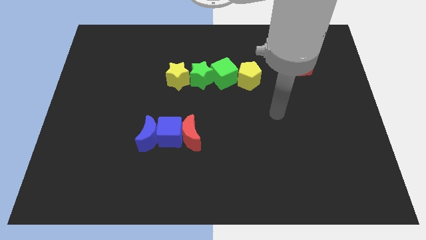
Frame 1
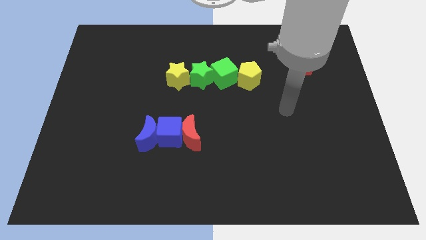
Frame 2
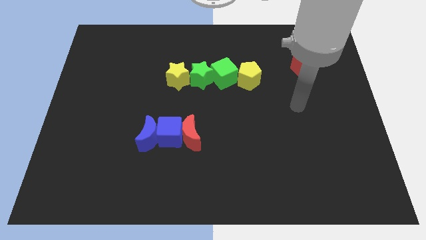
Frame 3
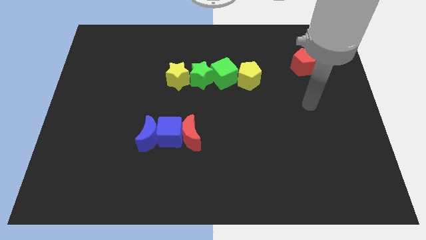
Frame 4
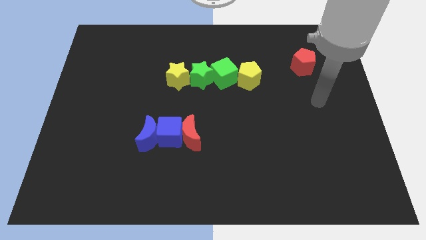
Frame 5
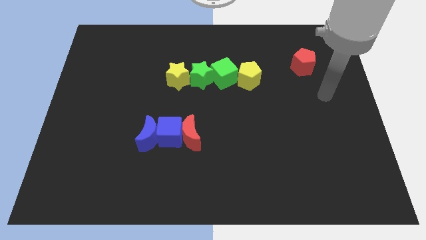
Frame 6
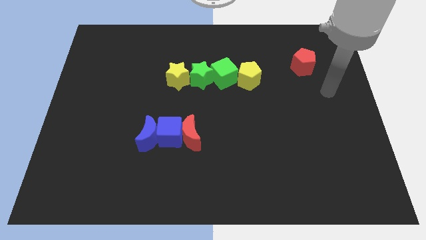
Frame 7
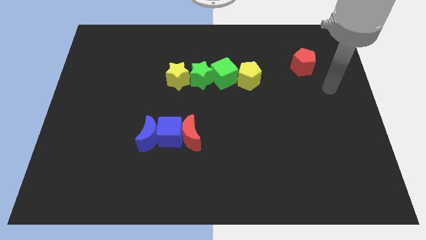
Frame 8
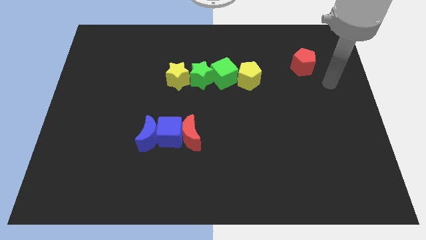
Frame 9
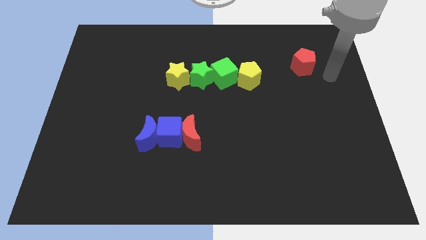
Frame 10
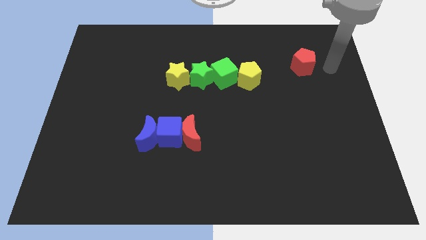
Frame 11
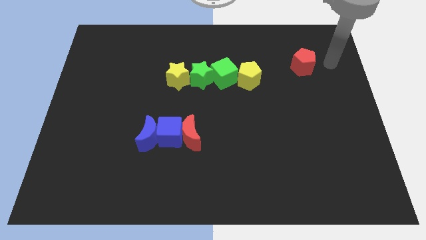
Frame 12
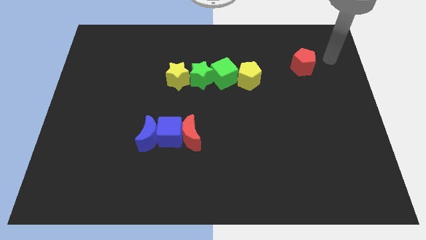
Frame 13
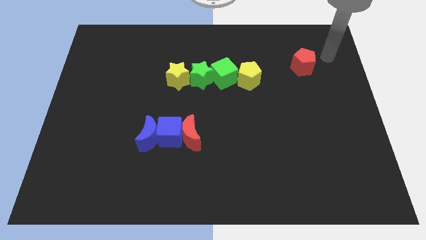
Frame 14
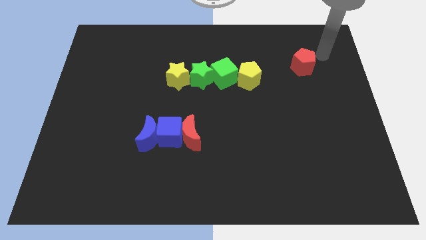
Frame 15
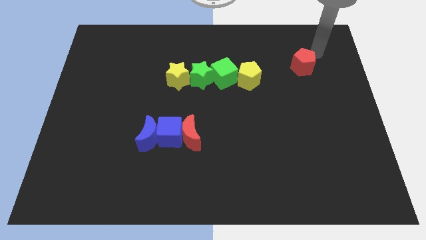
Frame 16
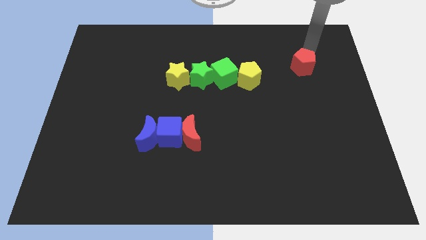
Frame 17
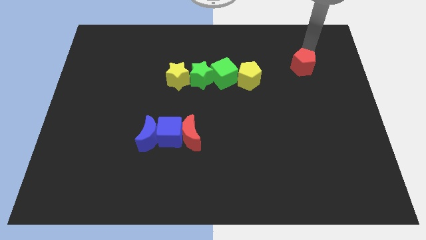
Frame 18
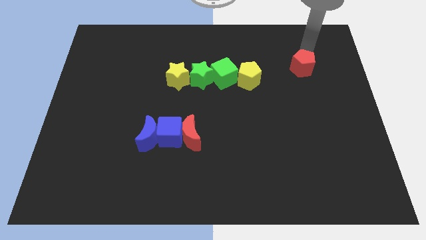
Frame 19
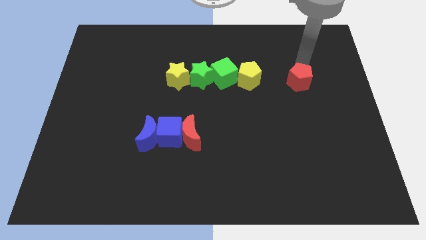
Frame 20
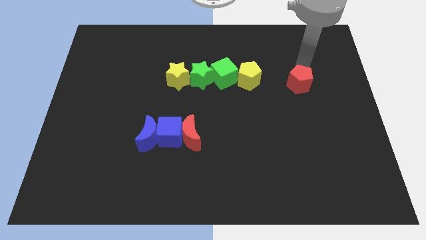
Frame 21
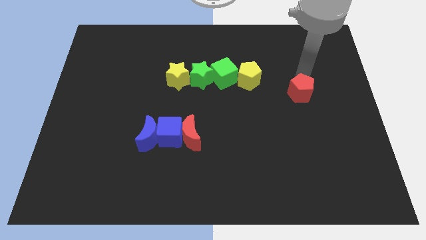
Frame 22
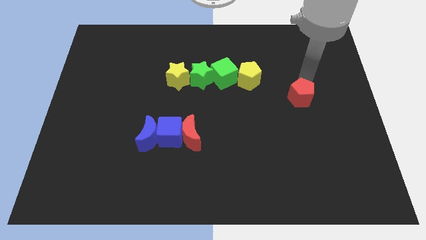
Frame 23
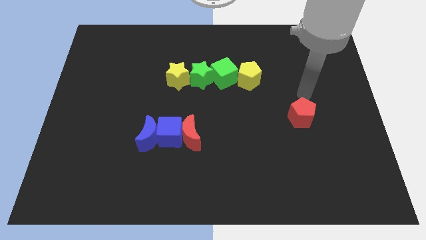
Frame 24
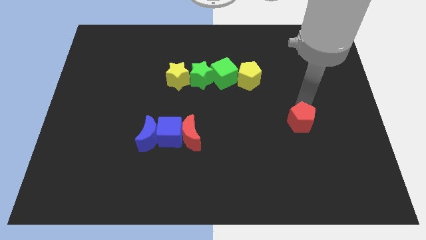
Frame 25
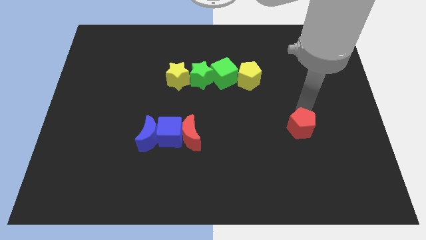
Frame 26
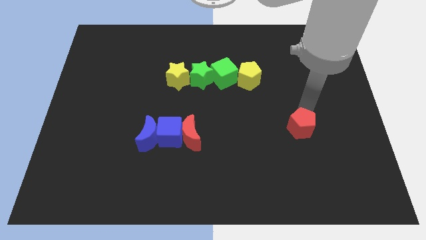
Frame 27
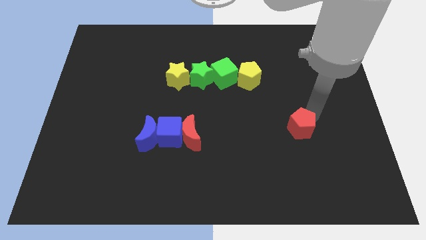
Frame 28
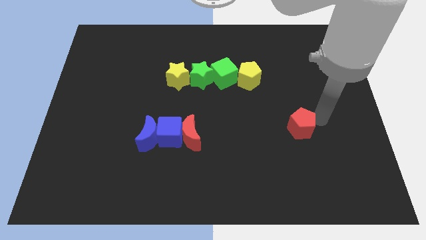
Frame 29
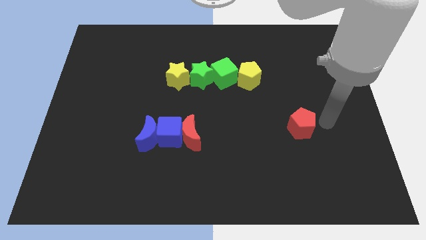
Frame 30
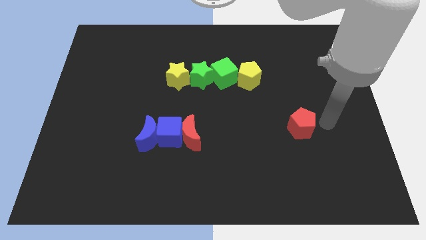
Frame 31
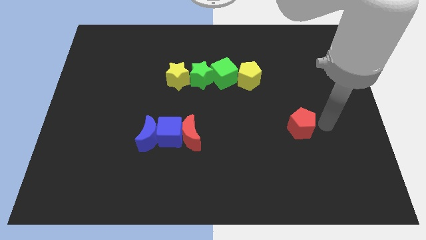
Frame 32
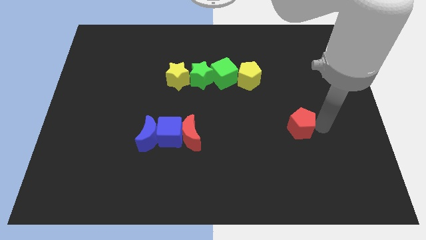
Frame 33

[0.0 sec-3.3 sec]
slide the red pentagon horizontally to the right side of the red crescent

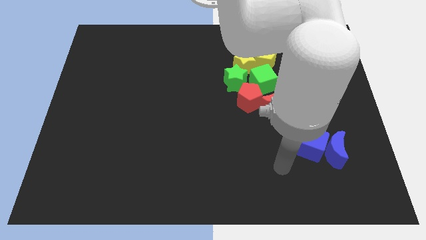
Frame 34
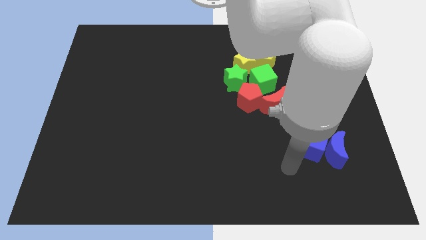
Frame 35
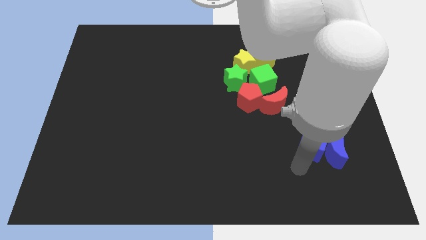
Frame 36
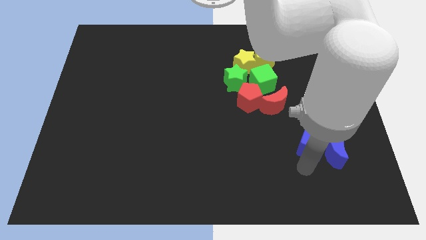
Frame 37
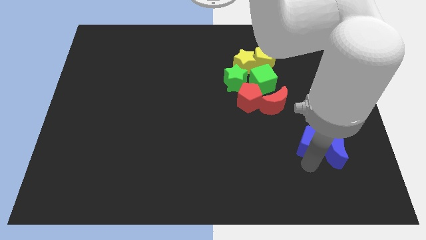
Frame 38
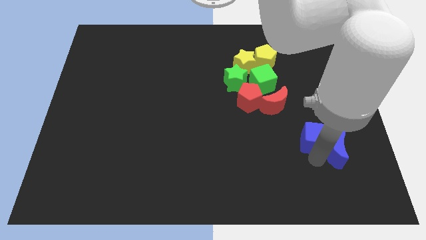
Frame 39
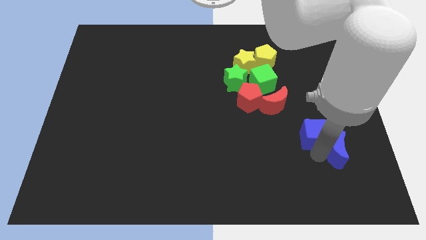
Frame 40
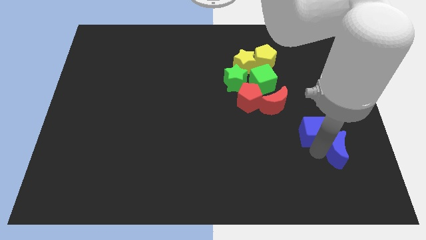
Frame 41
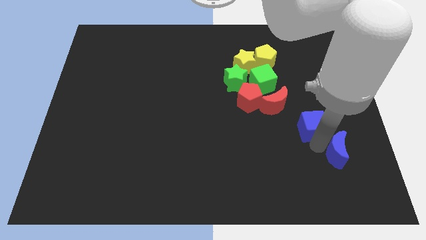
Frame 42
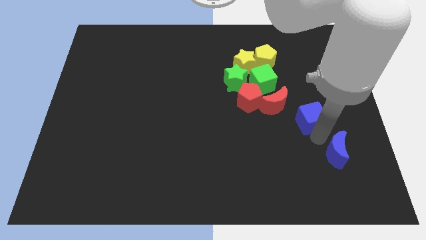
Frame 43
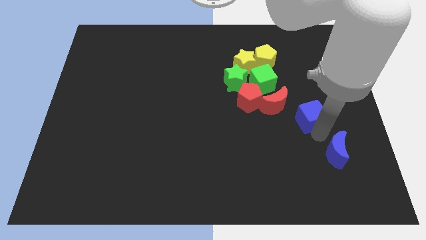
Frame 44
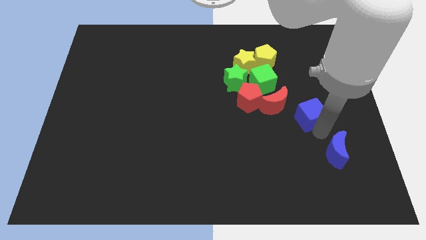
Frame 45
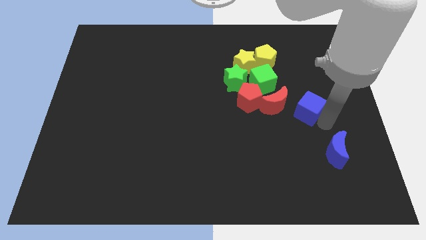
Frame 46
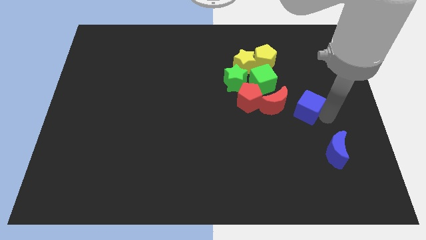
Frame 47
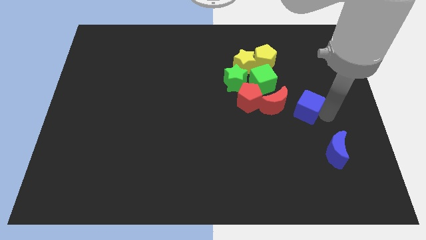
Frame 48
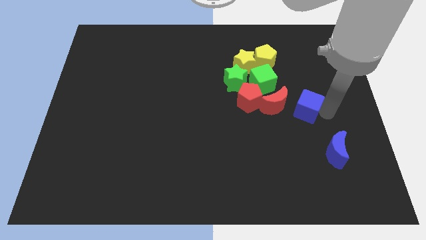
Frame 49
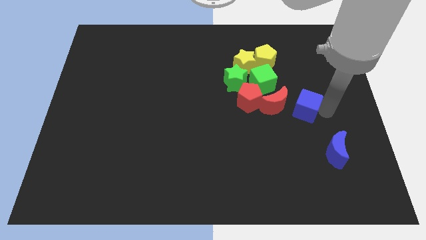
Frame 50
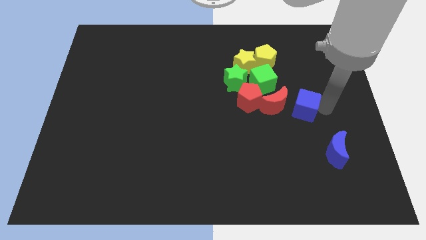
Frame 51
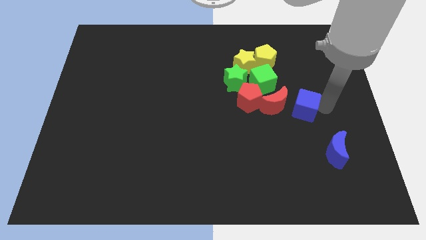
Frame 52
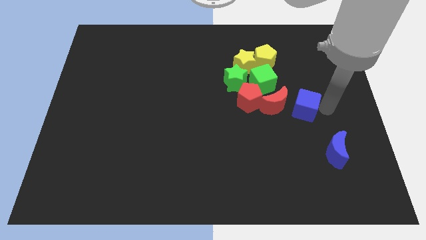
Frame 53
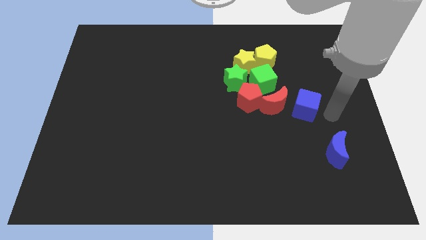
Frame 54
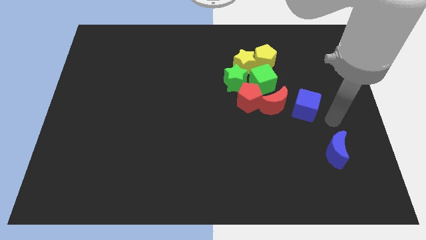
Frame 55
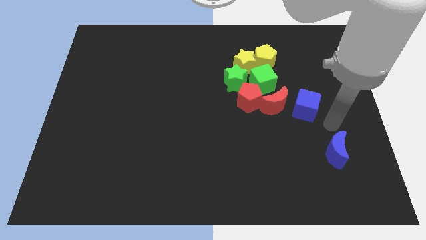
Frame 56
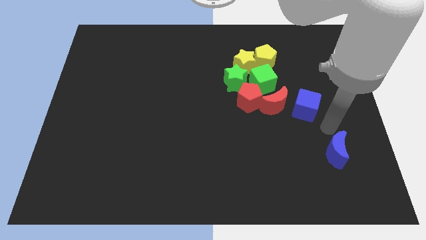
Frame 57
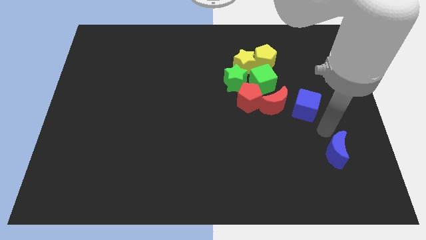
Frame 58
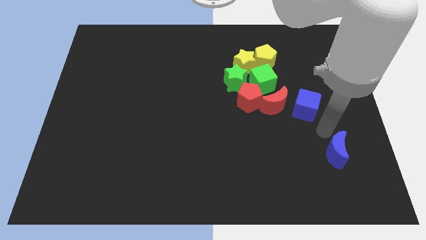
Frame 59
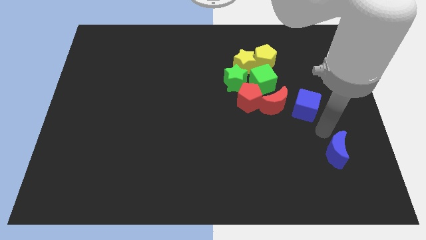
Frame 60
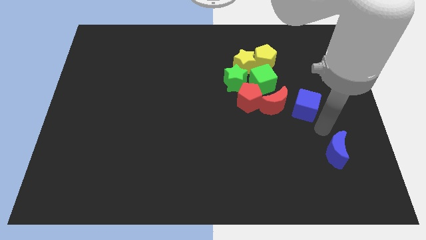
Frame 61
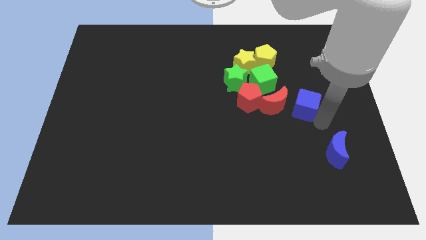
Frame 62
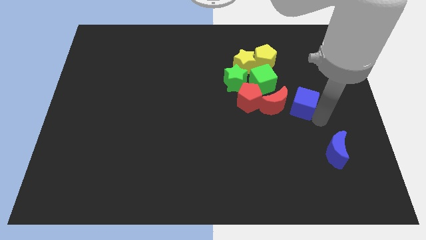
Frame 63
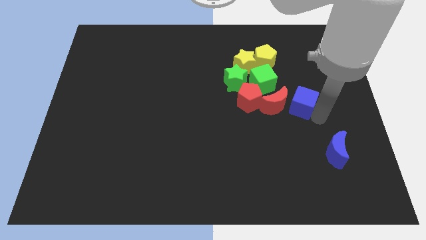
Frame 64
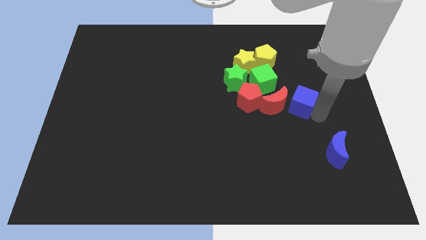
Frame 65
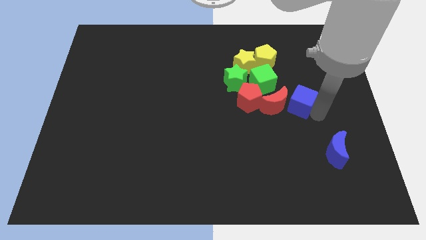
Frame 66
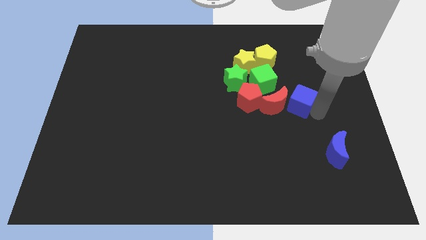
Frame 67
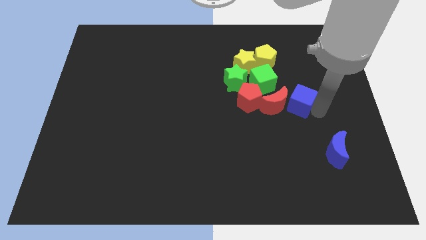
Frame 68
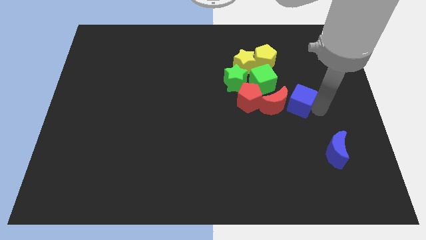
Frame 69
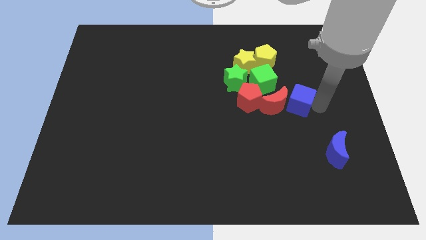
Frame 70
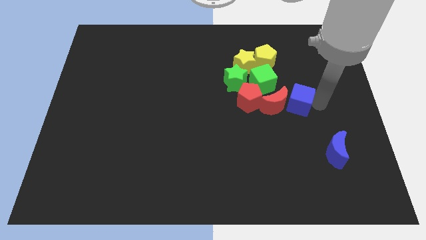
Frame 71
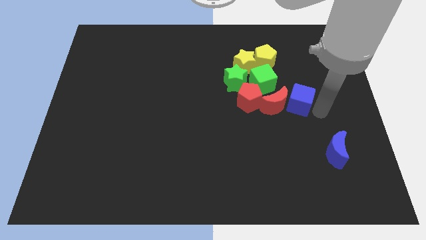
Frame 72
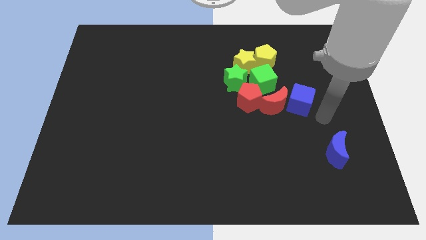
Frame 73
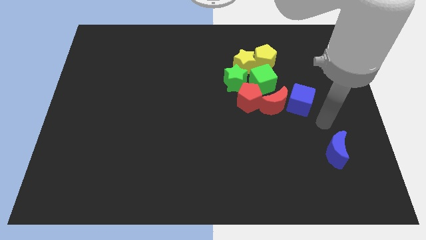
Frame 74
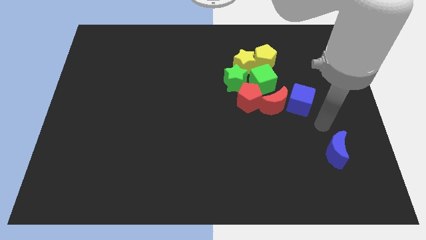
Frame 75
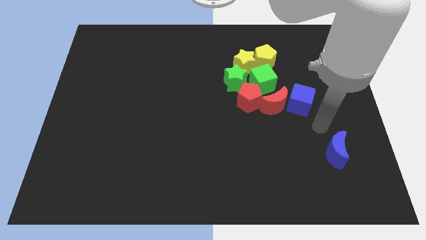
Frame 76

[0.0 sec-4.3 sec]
push blue cube towards the red crescent

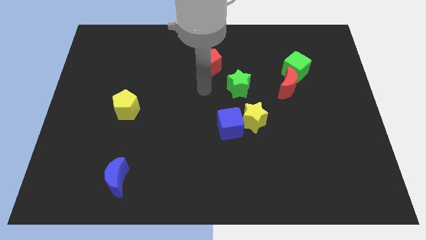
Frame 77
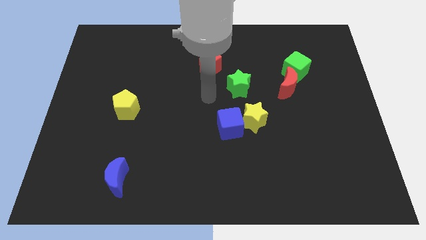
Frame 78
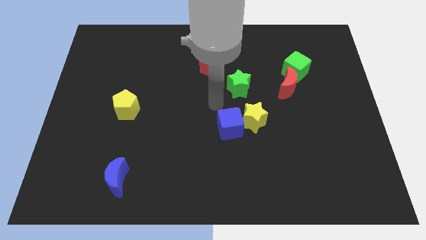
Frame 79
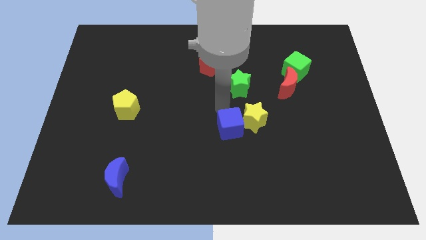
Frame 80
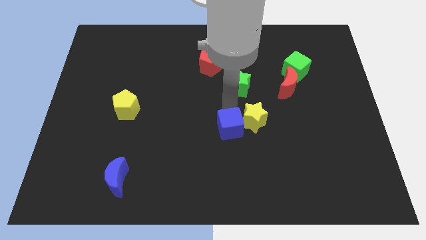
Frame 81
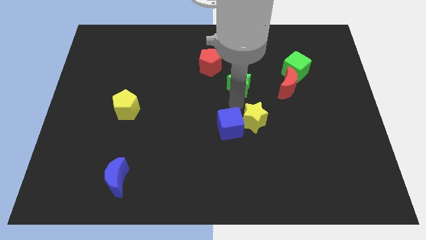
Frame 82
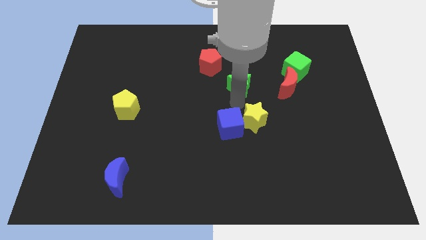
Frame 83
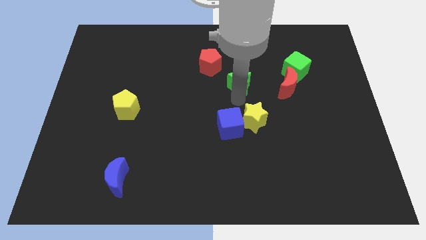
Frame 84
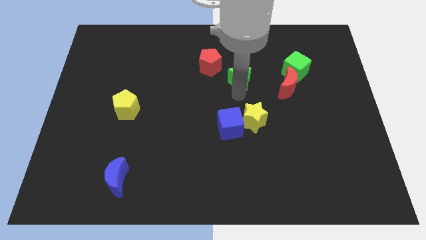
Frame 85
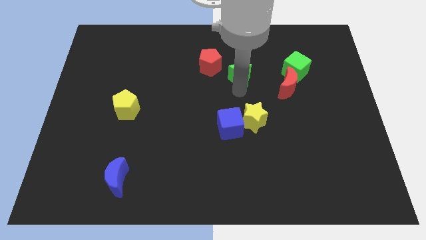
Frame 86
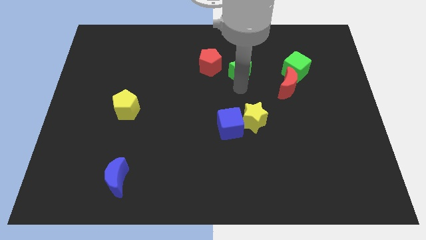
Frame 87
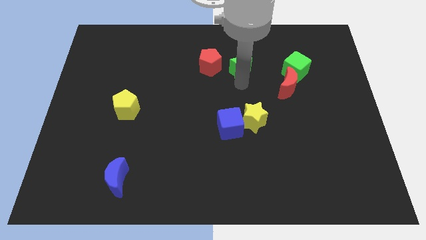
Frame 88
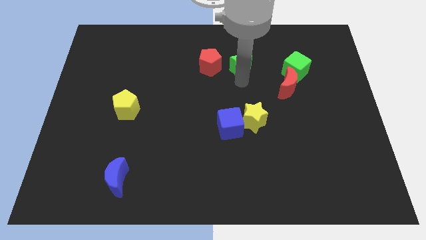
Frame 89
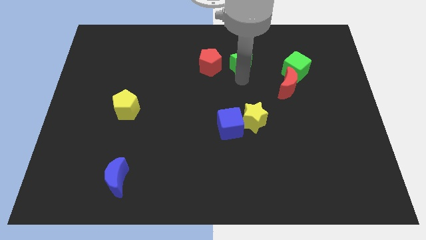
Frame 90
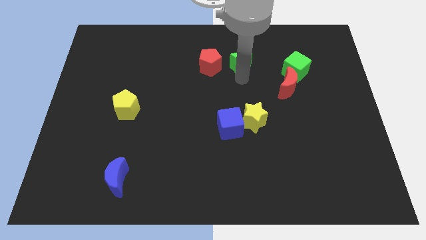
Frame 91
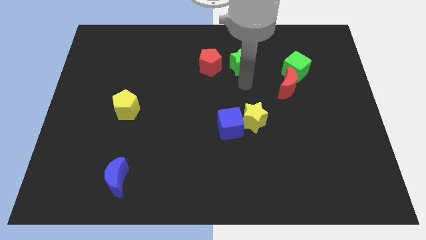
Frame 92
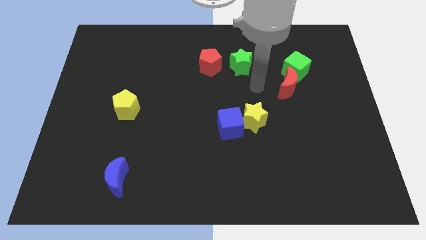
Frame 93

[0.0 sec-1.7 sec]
place the green star to the right of the red pentagon
